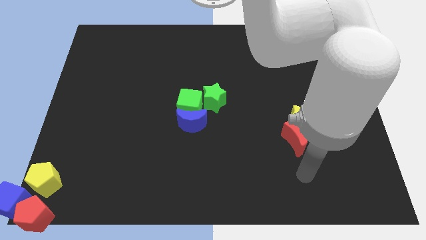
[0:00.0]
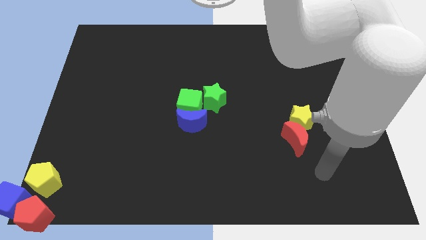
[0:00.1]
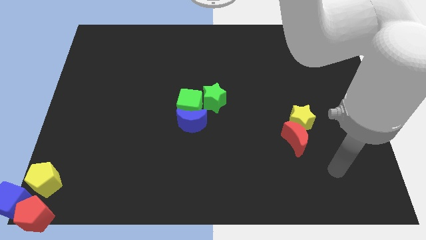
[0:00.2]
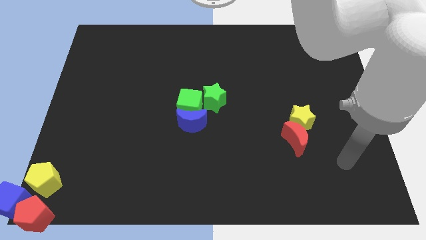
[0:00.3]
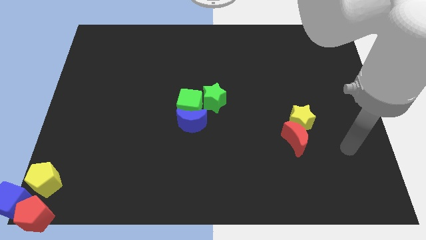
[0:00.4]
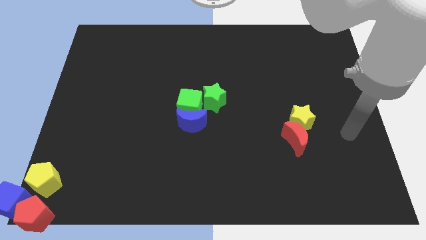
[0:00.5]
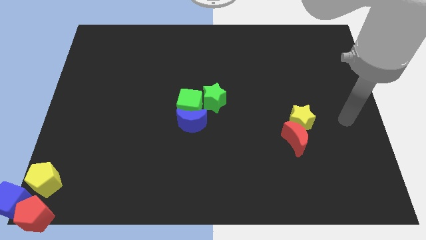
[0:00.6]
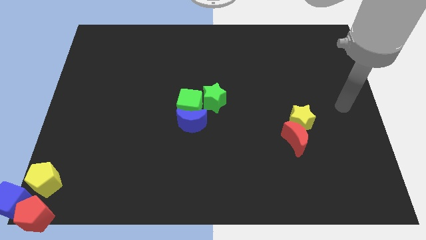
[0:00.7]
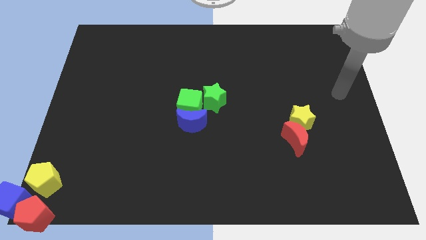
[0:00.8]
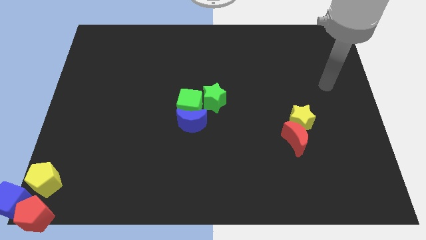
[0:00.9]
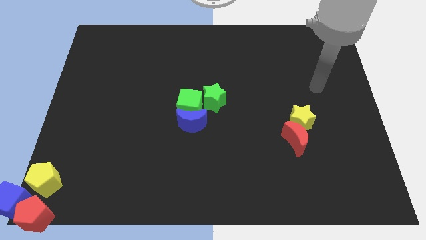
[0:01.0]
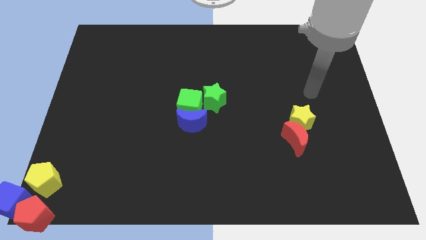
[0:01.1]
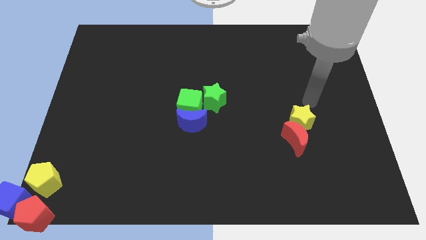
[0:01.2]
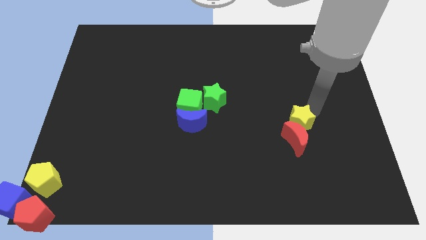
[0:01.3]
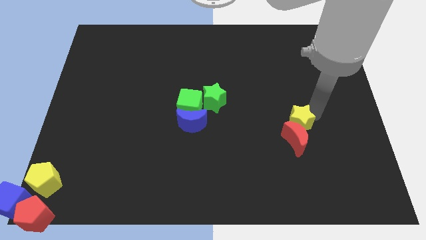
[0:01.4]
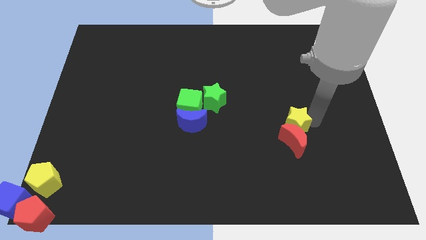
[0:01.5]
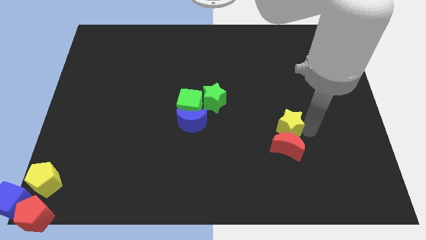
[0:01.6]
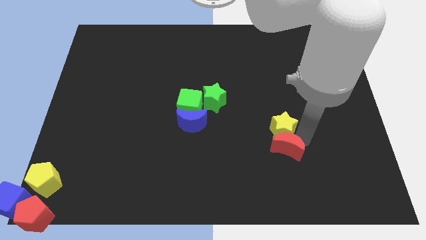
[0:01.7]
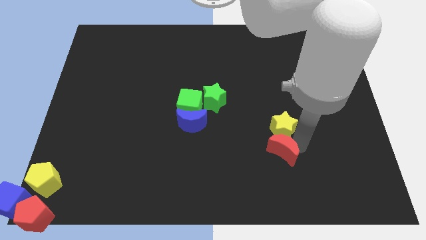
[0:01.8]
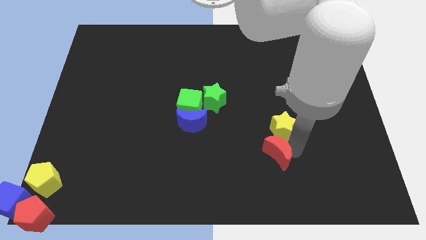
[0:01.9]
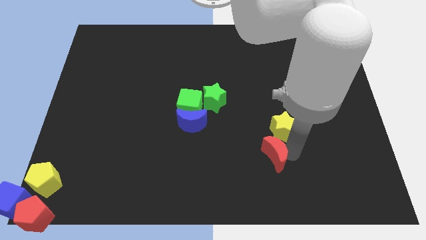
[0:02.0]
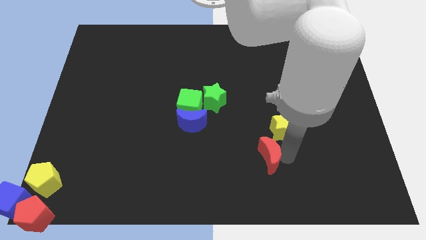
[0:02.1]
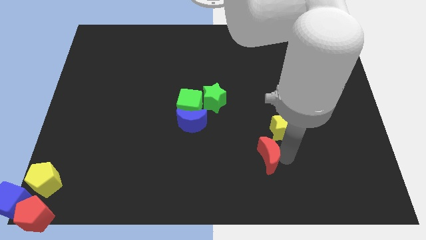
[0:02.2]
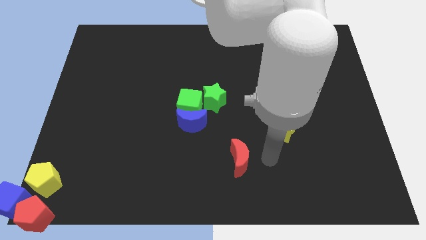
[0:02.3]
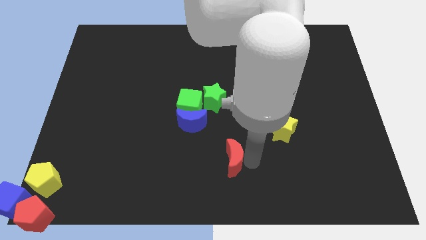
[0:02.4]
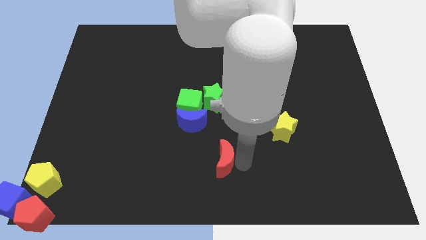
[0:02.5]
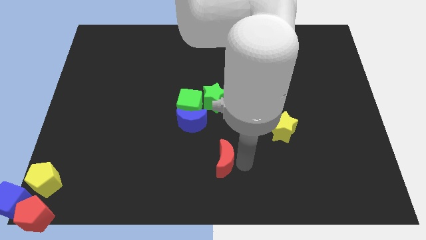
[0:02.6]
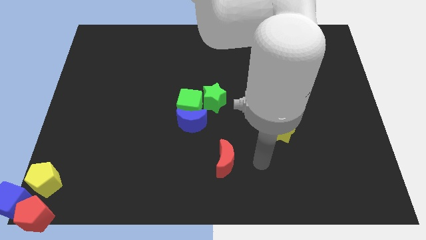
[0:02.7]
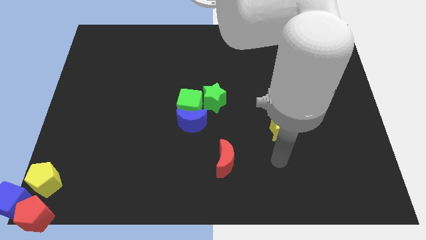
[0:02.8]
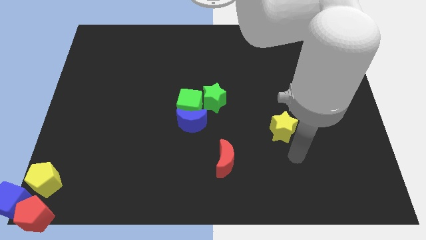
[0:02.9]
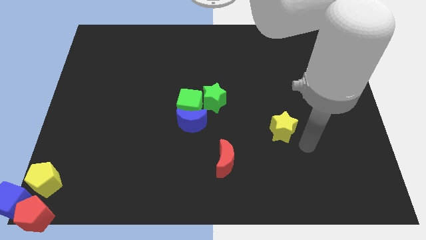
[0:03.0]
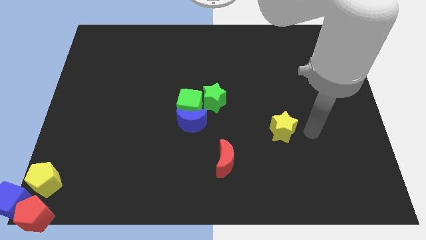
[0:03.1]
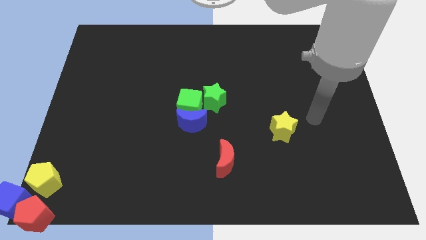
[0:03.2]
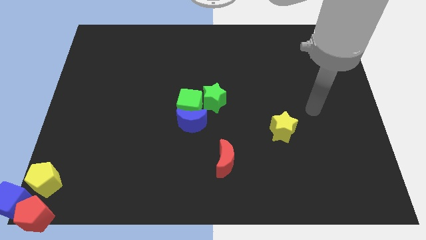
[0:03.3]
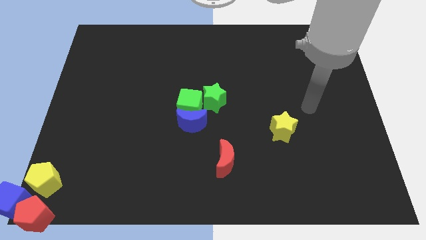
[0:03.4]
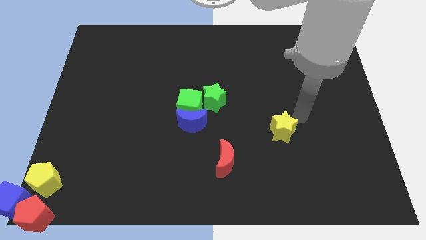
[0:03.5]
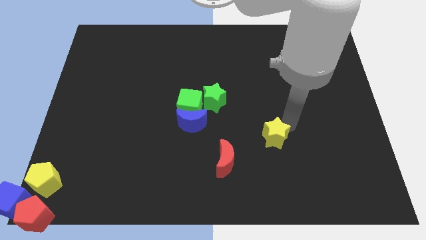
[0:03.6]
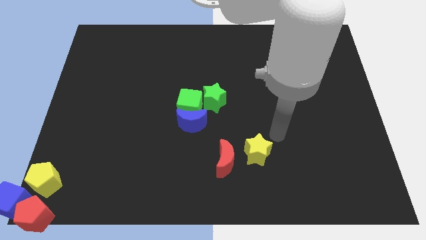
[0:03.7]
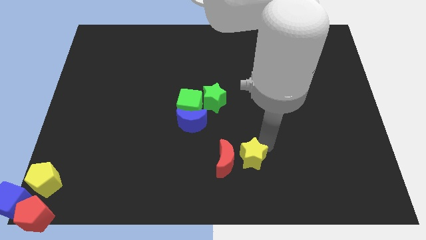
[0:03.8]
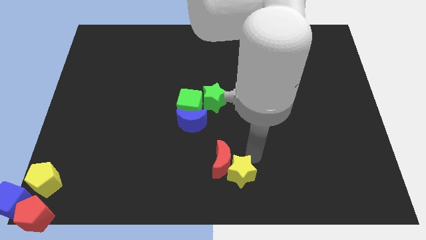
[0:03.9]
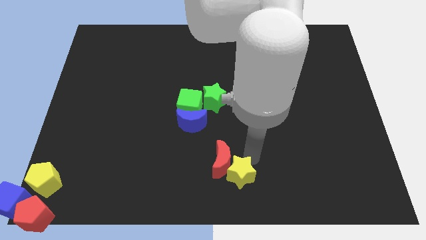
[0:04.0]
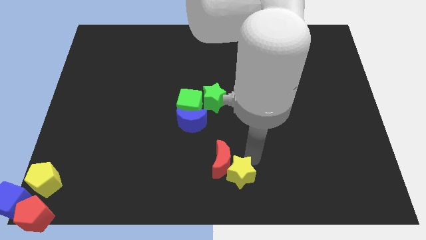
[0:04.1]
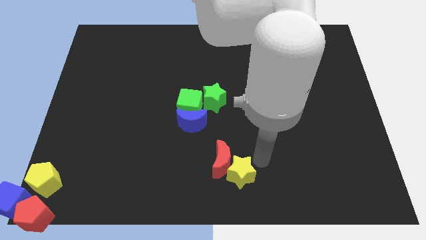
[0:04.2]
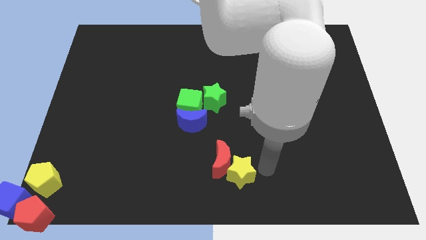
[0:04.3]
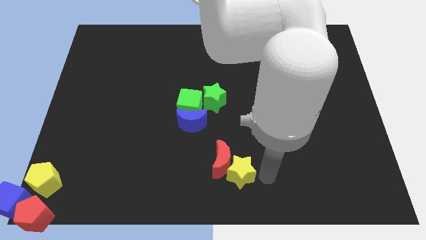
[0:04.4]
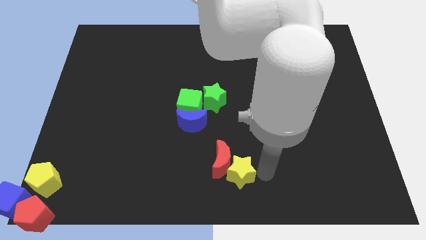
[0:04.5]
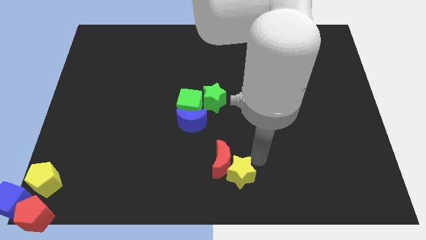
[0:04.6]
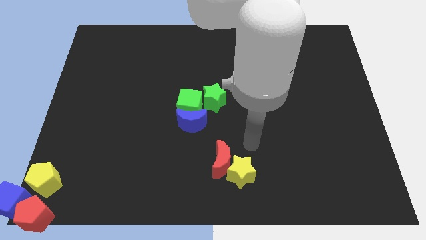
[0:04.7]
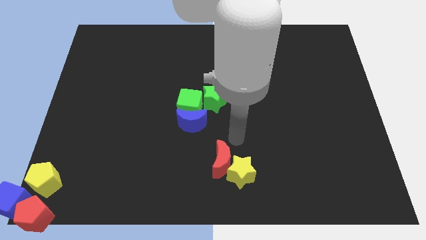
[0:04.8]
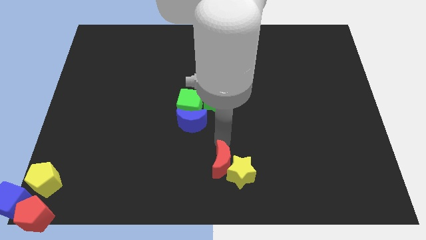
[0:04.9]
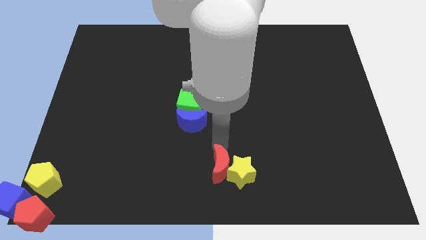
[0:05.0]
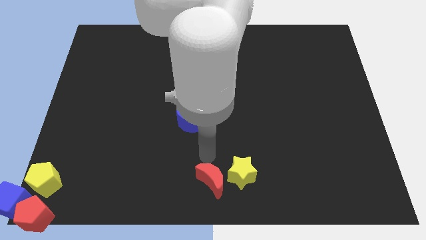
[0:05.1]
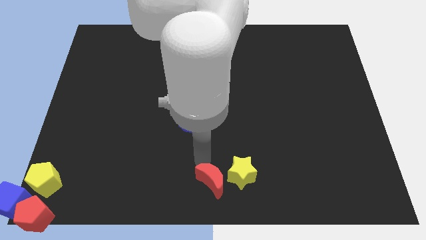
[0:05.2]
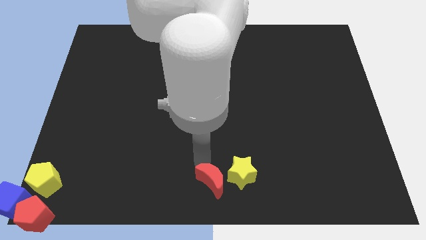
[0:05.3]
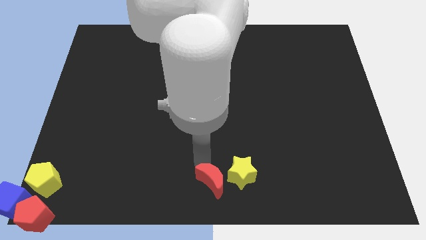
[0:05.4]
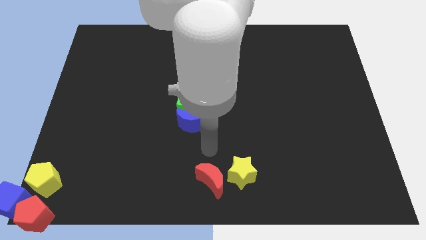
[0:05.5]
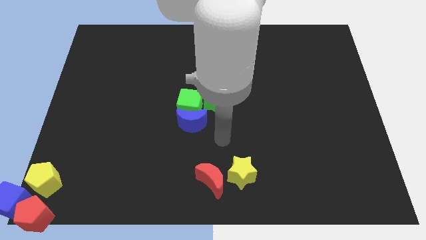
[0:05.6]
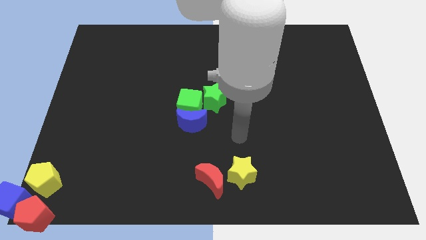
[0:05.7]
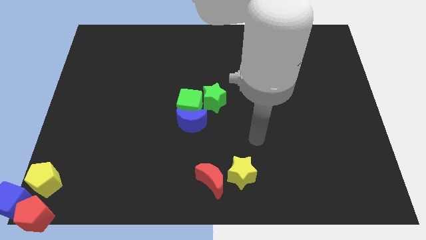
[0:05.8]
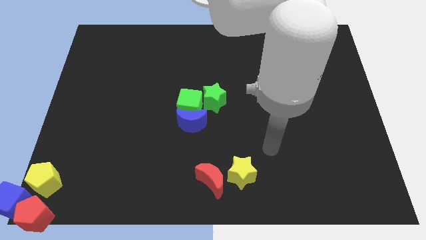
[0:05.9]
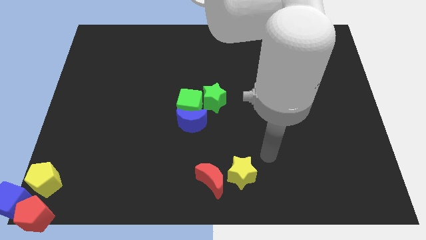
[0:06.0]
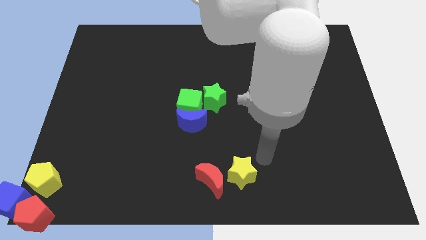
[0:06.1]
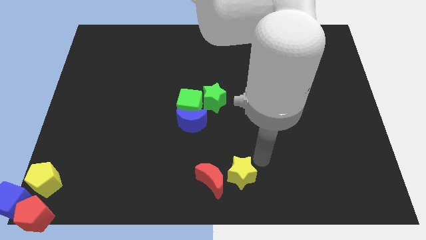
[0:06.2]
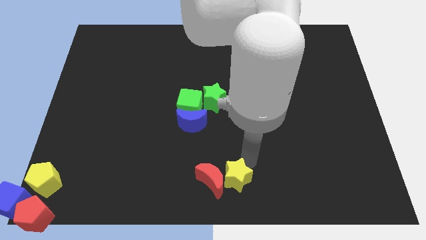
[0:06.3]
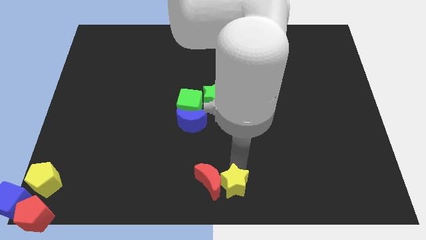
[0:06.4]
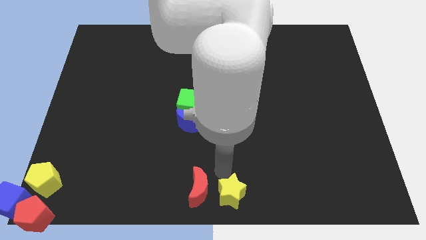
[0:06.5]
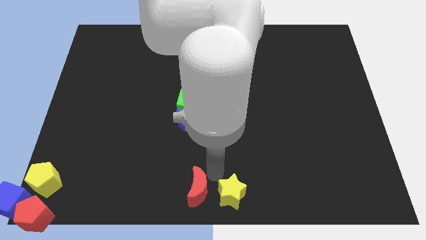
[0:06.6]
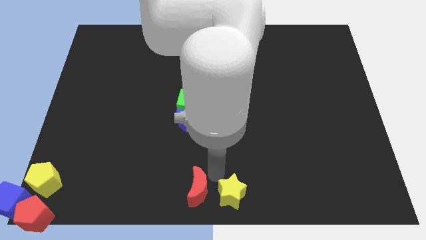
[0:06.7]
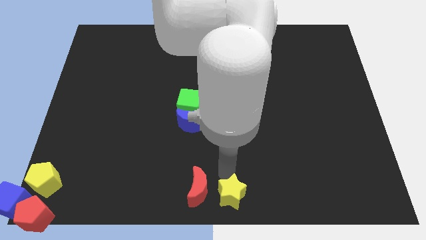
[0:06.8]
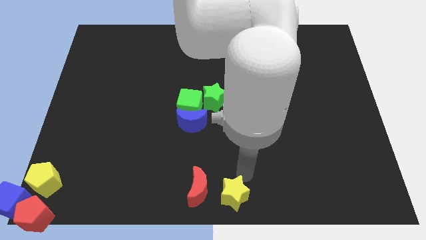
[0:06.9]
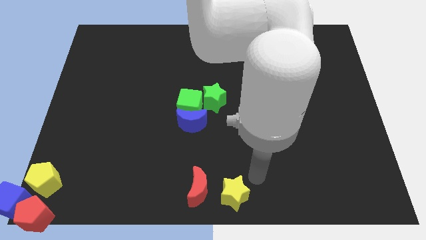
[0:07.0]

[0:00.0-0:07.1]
push yellow star and red moon to the bottom center

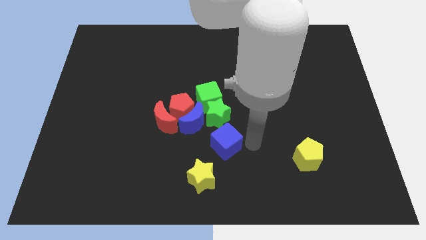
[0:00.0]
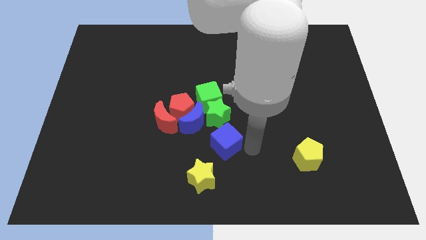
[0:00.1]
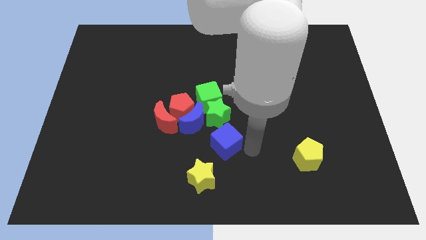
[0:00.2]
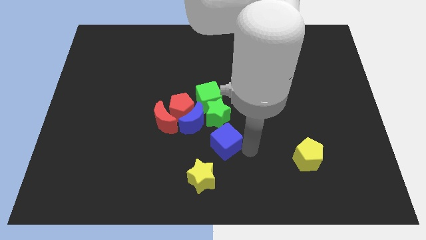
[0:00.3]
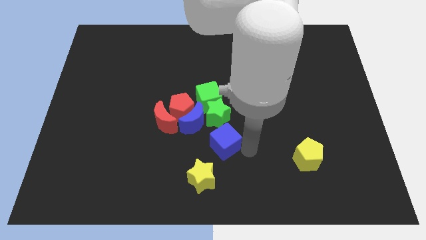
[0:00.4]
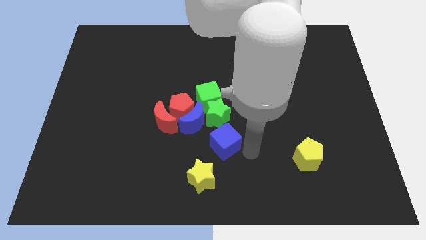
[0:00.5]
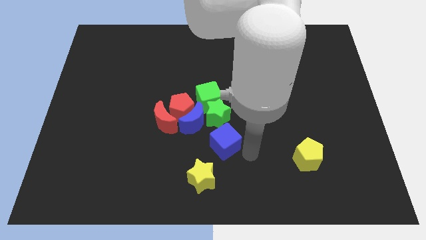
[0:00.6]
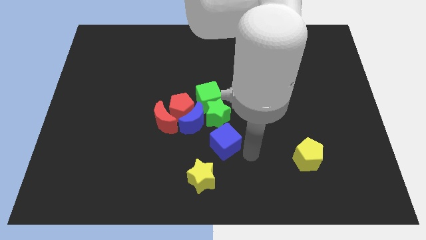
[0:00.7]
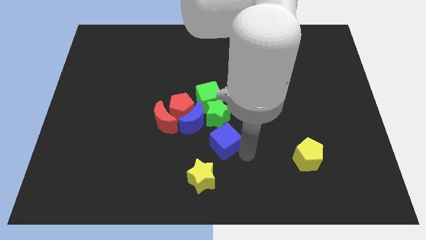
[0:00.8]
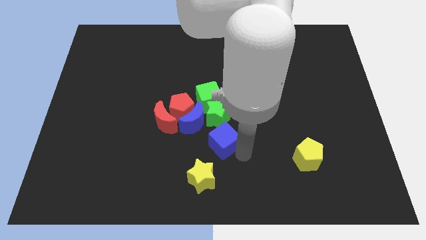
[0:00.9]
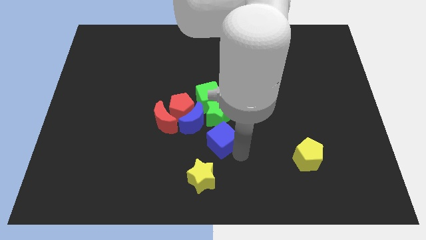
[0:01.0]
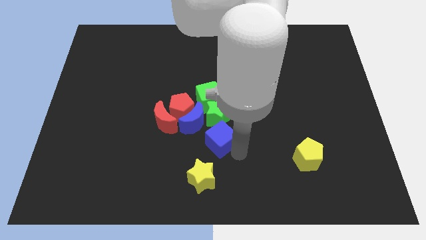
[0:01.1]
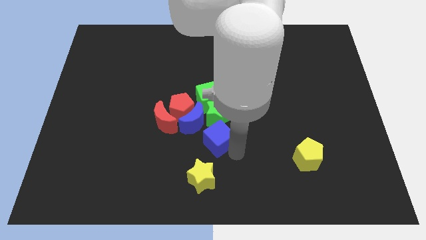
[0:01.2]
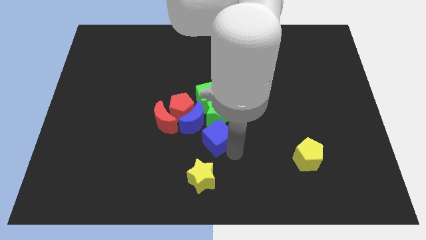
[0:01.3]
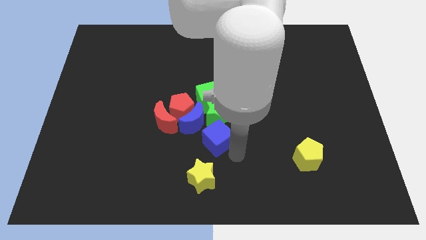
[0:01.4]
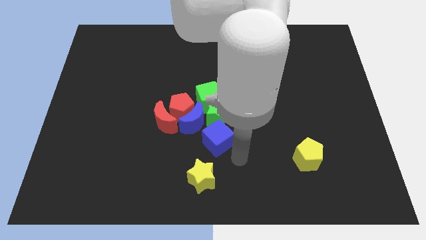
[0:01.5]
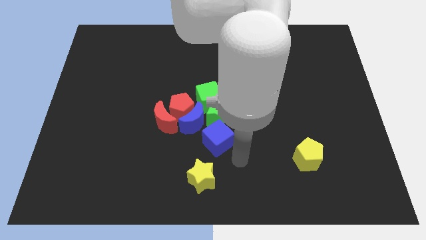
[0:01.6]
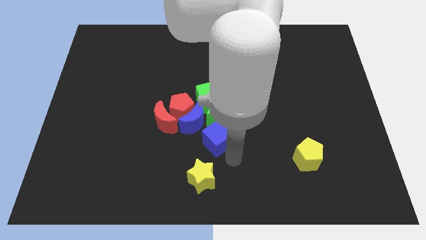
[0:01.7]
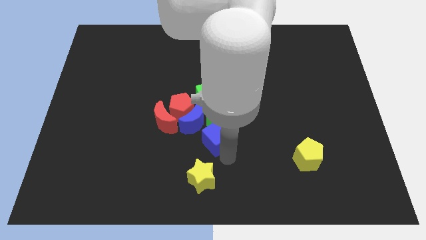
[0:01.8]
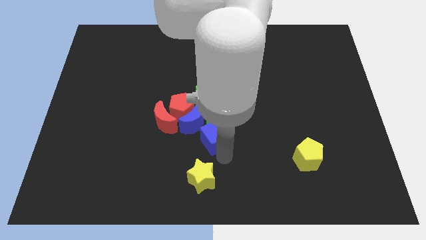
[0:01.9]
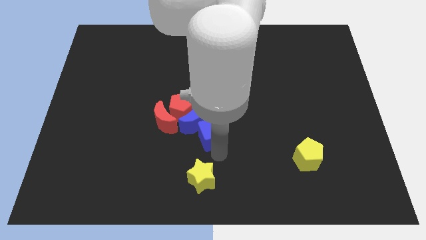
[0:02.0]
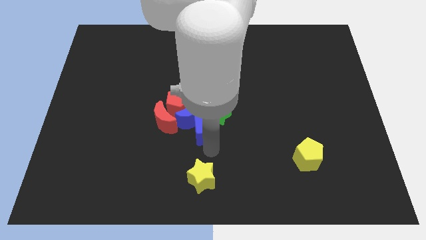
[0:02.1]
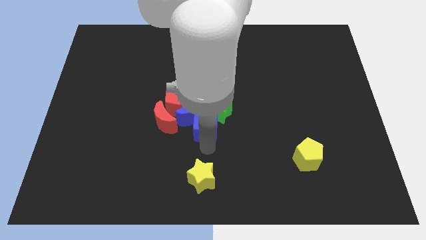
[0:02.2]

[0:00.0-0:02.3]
push the blue cube into group of blocks at the center
